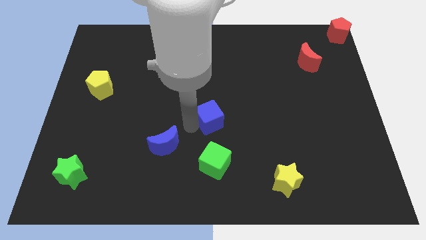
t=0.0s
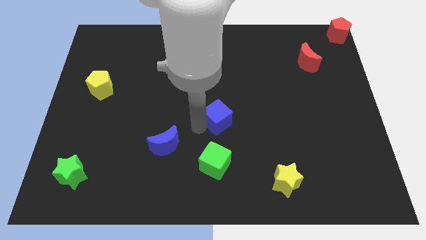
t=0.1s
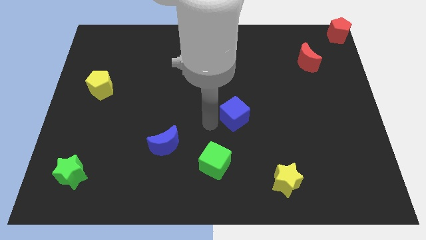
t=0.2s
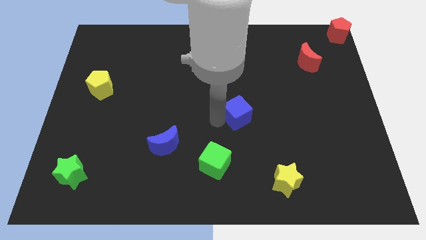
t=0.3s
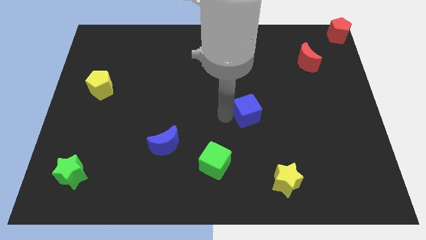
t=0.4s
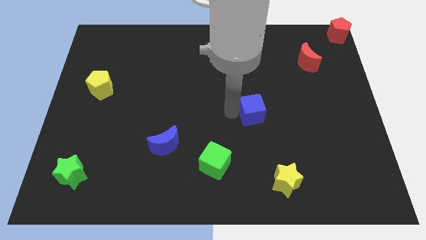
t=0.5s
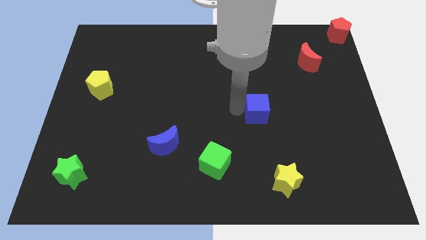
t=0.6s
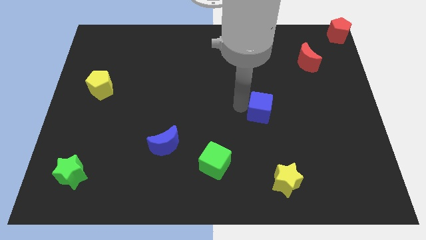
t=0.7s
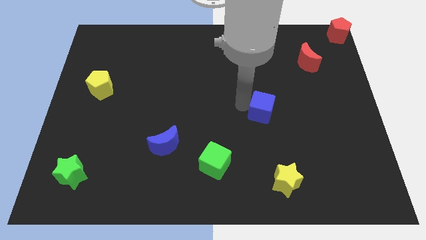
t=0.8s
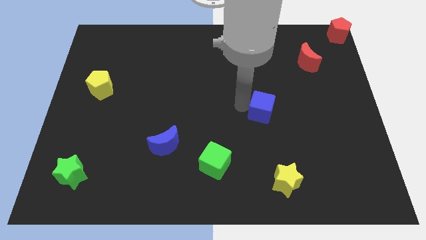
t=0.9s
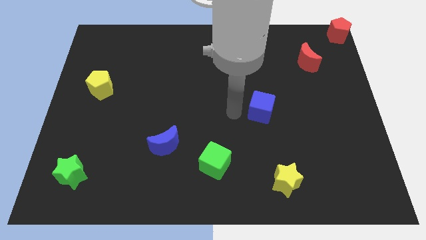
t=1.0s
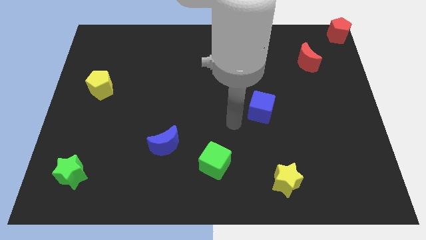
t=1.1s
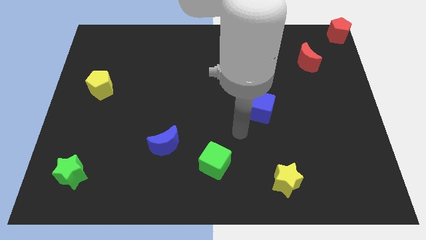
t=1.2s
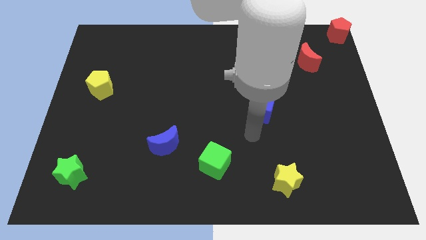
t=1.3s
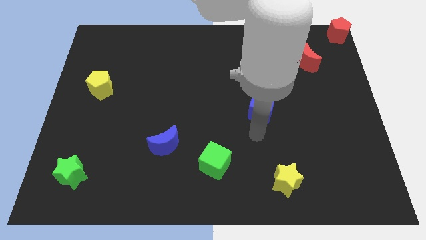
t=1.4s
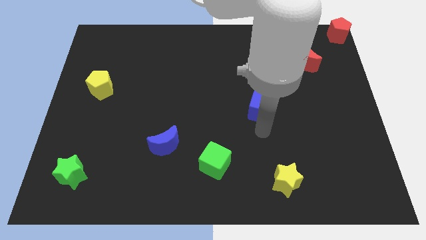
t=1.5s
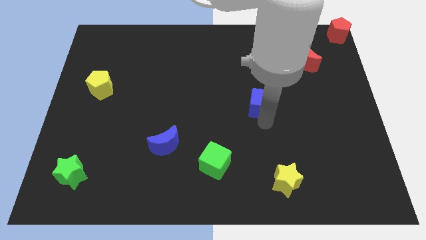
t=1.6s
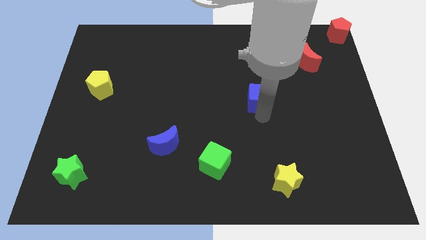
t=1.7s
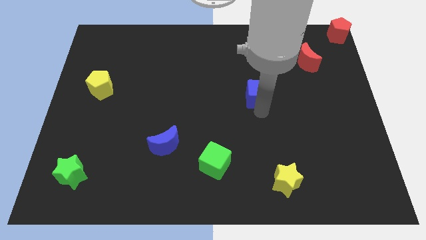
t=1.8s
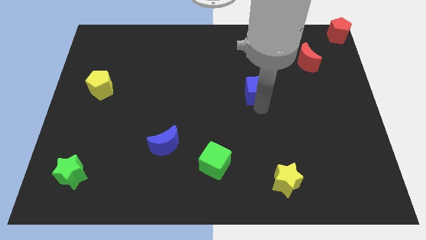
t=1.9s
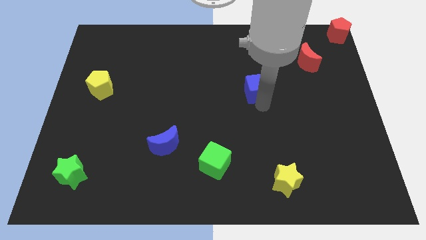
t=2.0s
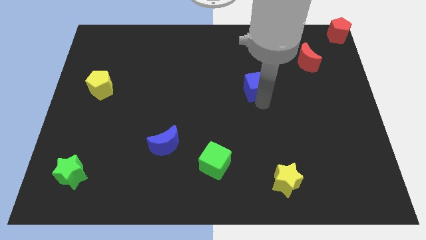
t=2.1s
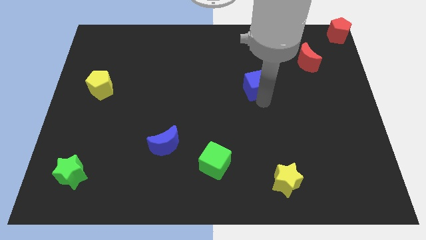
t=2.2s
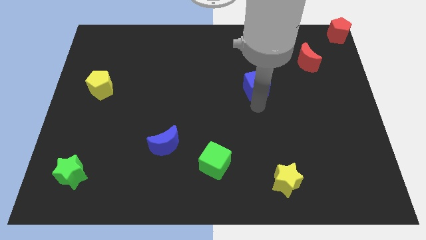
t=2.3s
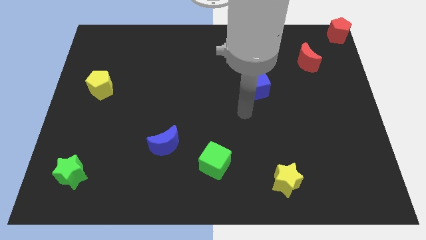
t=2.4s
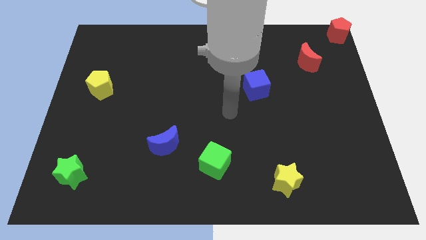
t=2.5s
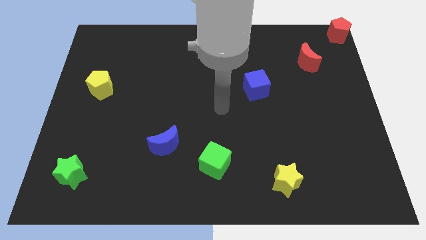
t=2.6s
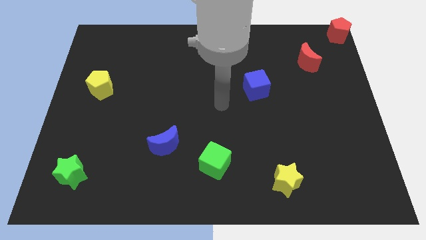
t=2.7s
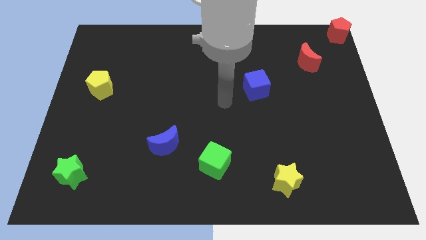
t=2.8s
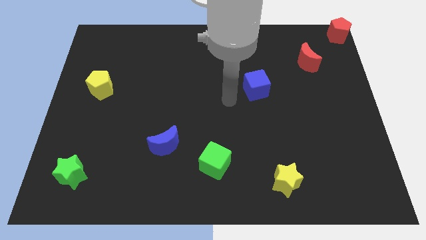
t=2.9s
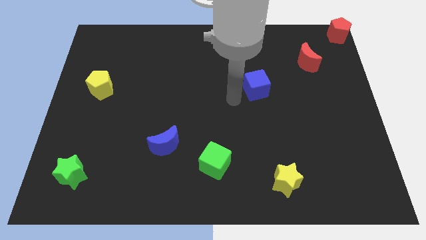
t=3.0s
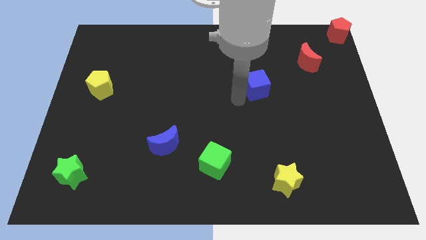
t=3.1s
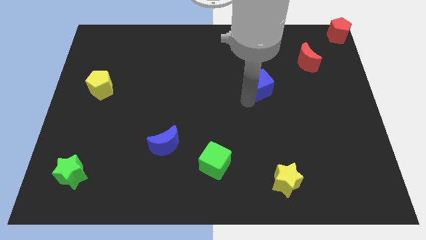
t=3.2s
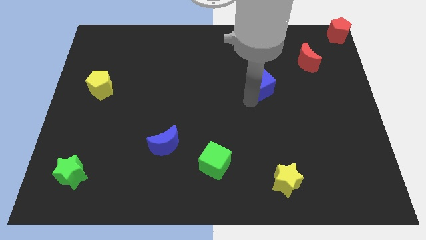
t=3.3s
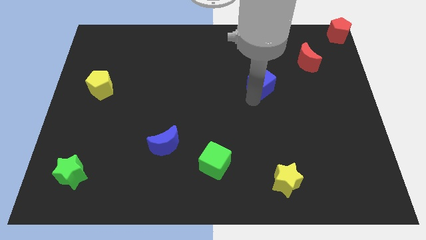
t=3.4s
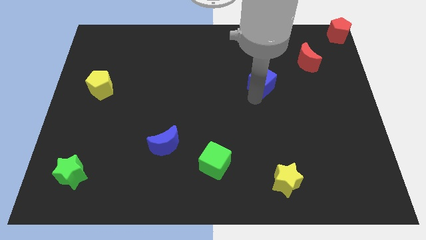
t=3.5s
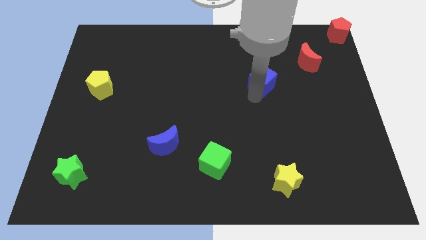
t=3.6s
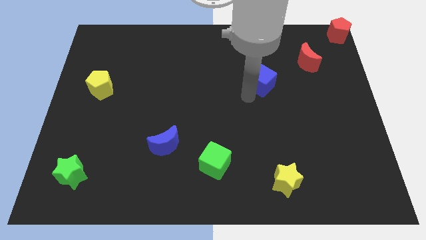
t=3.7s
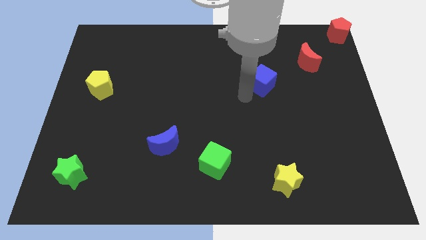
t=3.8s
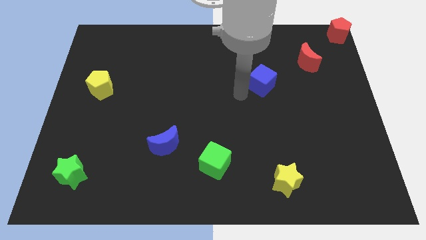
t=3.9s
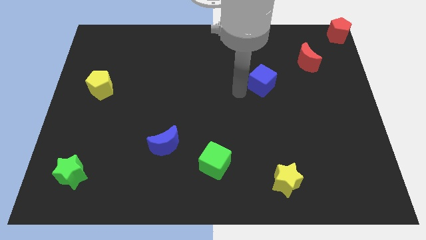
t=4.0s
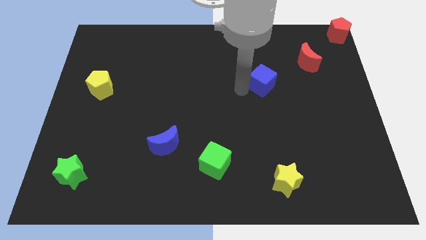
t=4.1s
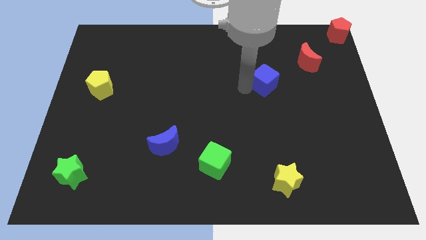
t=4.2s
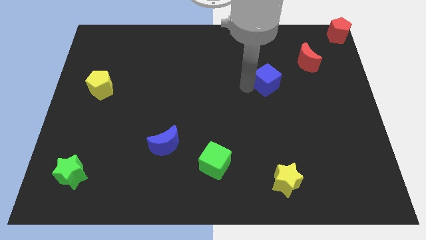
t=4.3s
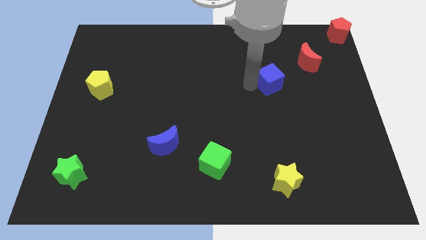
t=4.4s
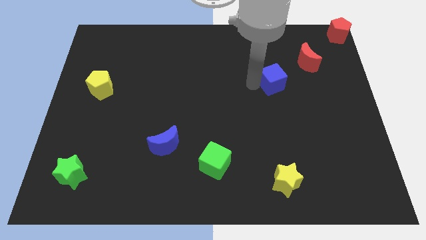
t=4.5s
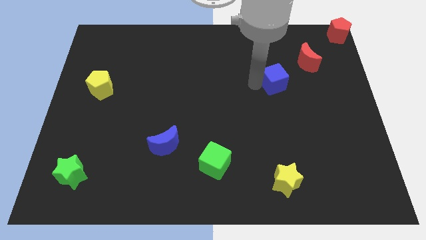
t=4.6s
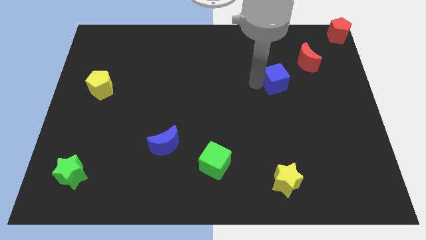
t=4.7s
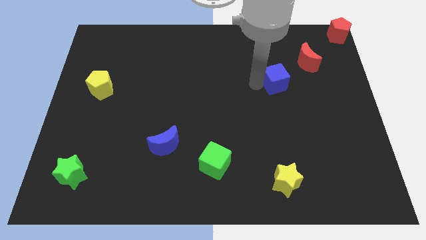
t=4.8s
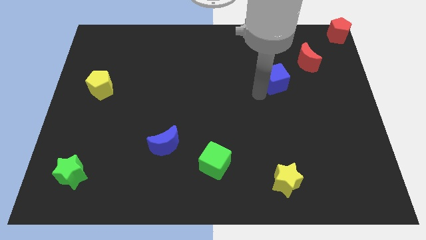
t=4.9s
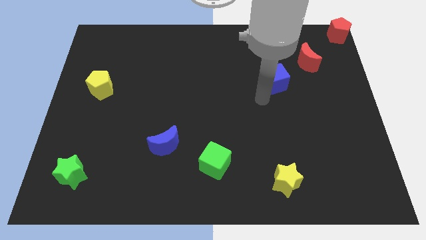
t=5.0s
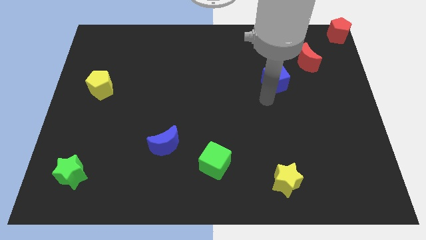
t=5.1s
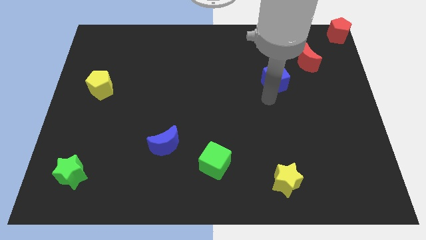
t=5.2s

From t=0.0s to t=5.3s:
move the blue cube to the top of the yellow star

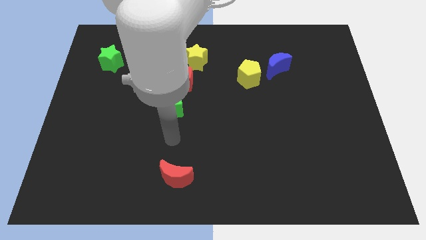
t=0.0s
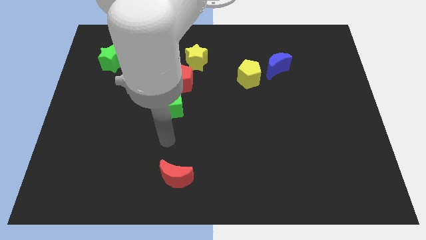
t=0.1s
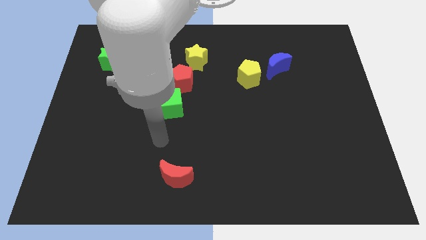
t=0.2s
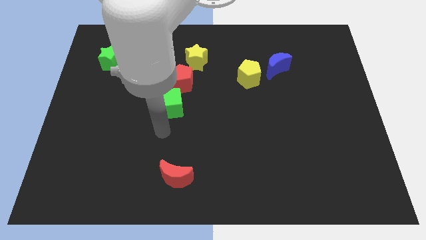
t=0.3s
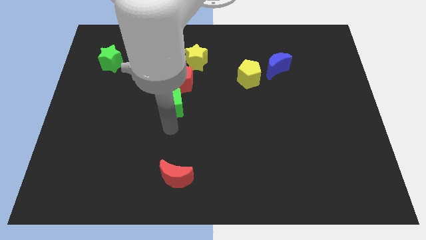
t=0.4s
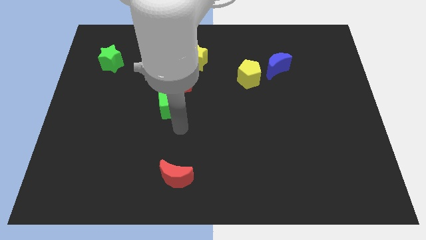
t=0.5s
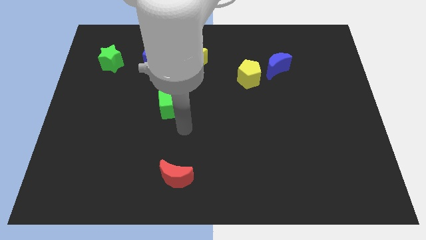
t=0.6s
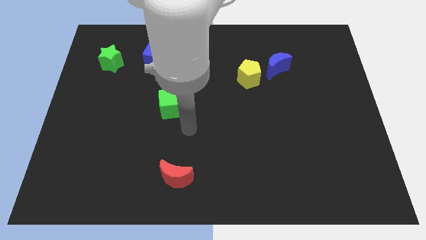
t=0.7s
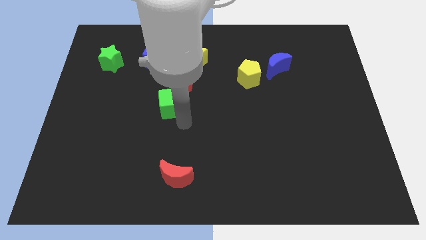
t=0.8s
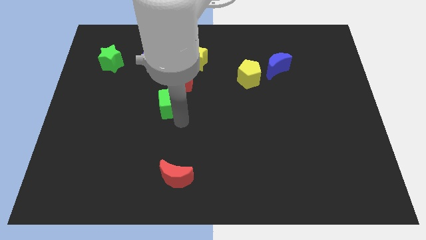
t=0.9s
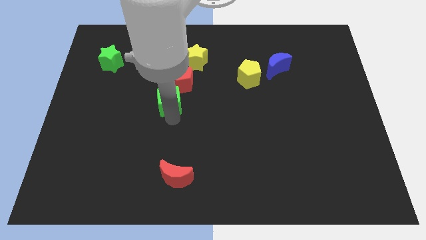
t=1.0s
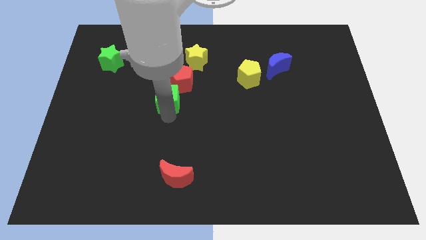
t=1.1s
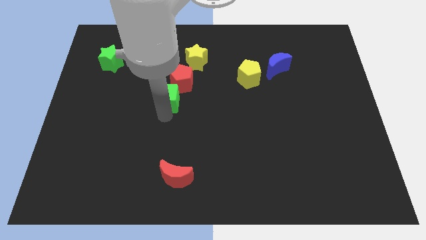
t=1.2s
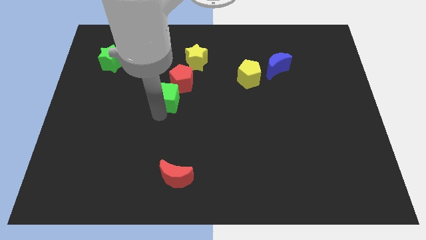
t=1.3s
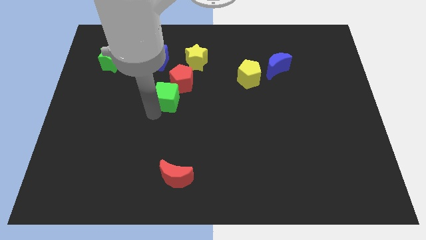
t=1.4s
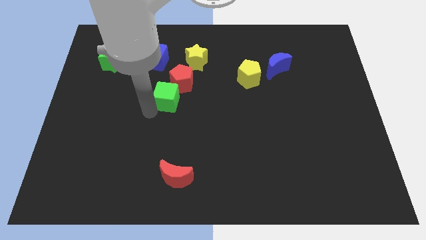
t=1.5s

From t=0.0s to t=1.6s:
adjust the green cube to the bottom left of the red pentagon

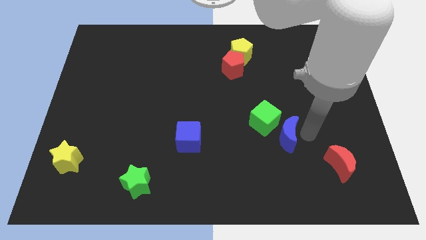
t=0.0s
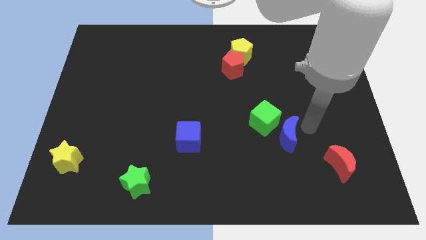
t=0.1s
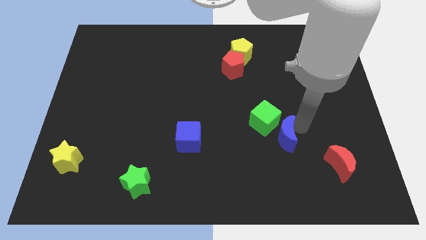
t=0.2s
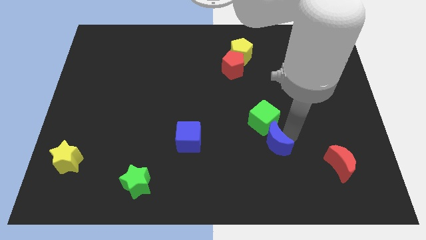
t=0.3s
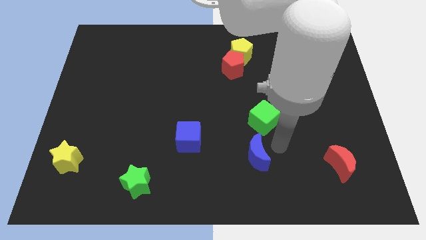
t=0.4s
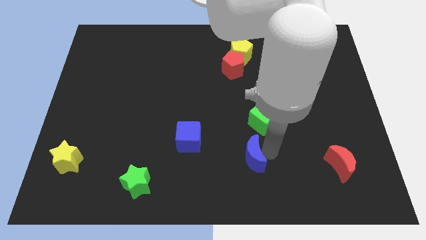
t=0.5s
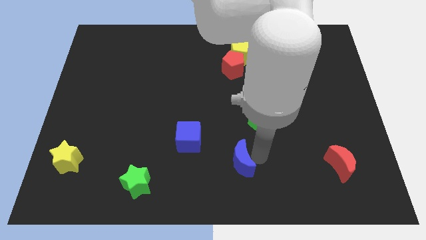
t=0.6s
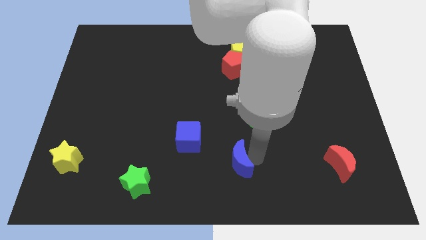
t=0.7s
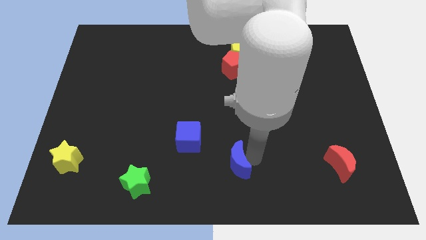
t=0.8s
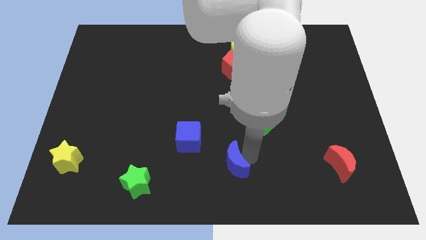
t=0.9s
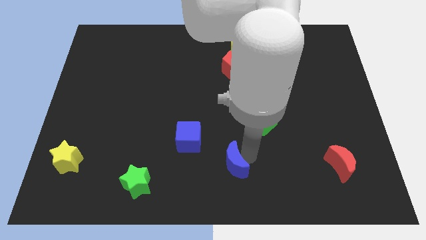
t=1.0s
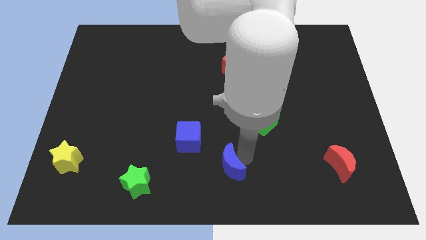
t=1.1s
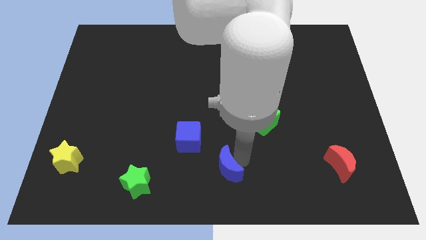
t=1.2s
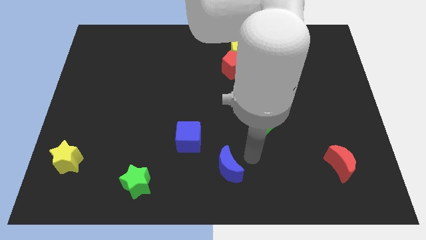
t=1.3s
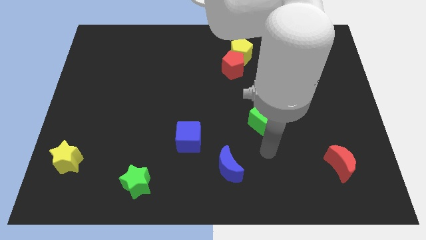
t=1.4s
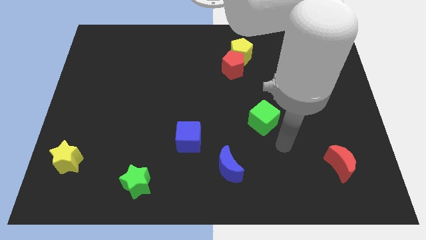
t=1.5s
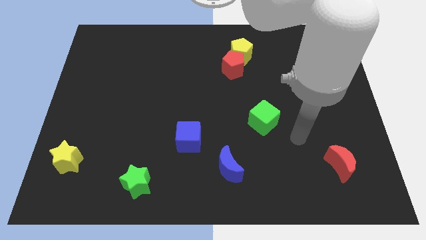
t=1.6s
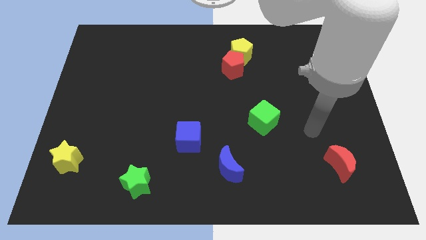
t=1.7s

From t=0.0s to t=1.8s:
slide the blue moon away from the green cube

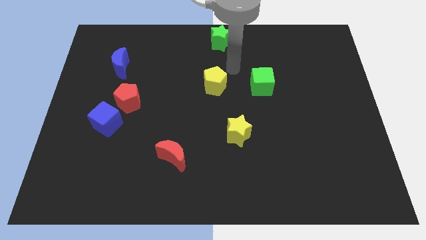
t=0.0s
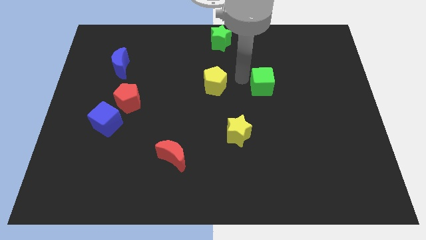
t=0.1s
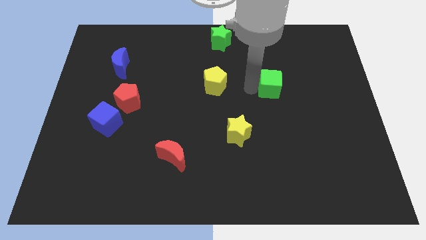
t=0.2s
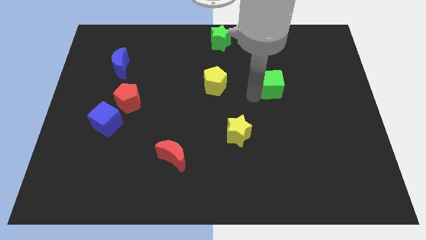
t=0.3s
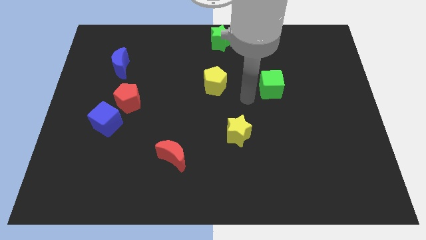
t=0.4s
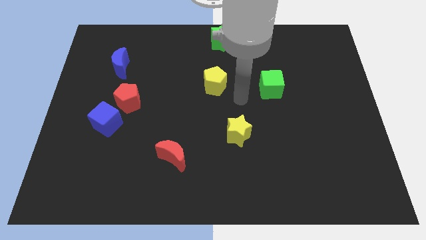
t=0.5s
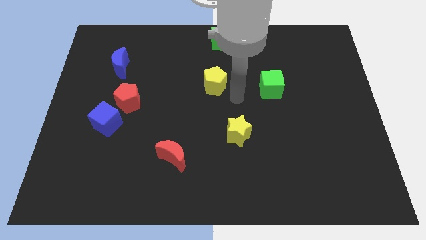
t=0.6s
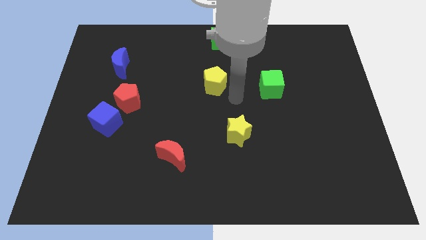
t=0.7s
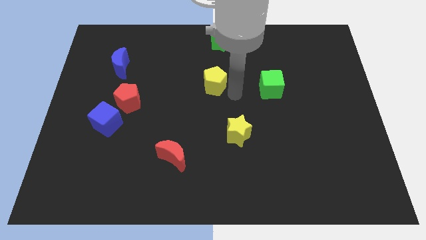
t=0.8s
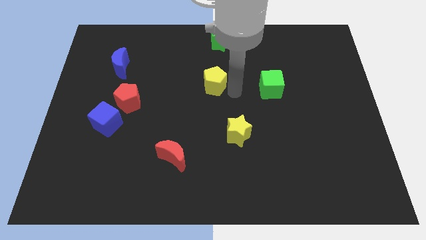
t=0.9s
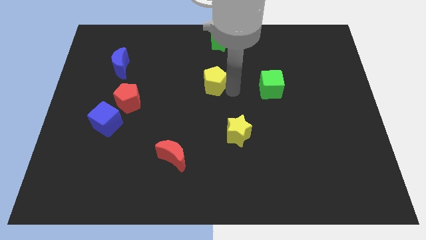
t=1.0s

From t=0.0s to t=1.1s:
push the green cube slightly to right
